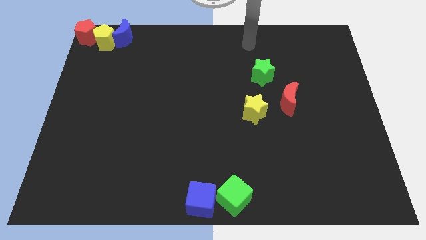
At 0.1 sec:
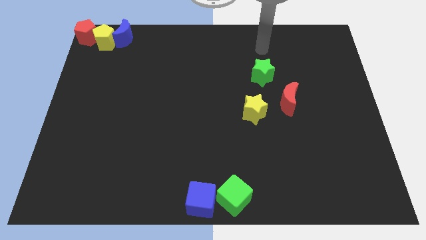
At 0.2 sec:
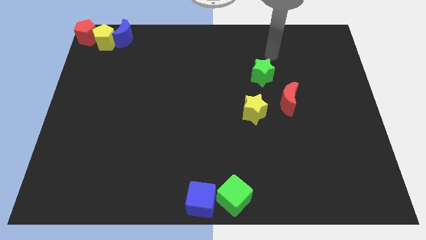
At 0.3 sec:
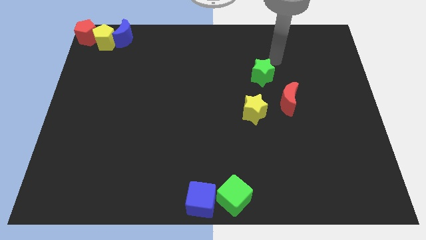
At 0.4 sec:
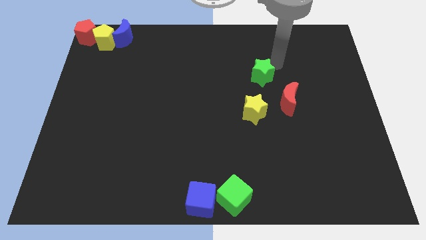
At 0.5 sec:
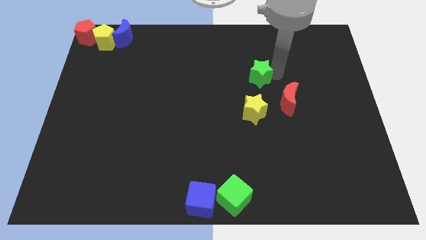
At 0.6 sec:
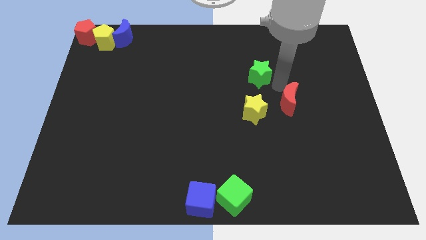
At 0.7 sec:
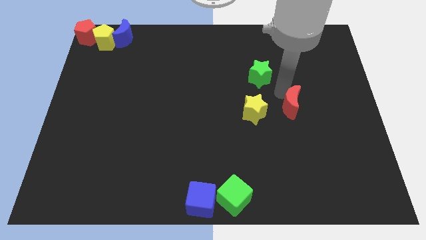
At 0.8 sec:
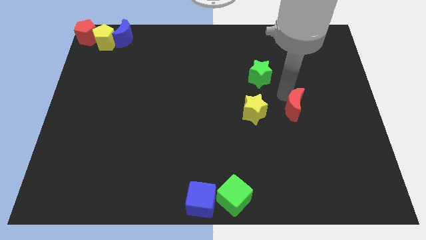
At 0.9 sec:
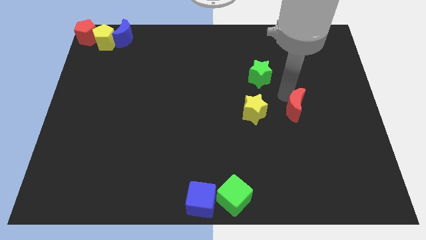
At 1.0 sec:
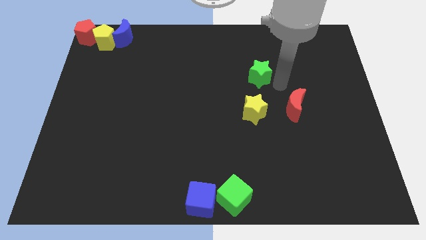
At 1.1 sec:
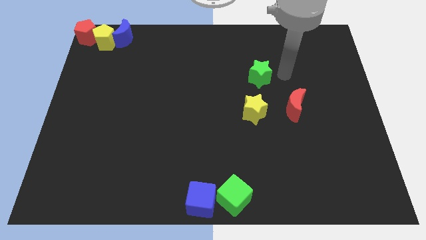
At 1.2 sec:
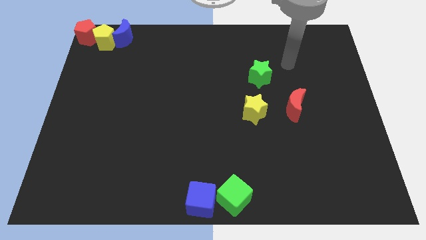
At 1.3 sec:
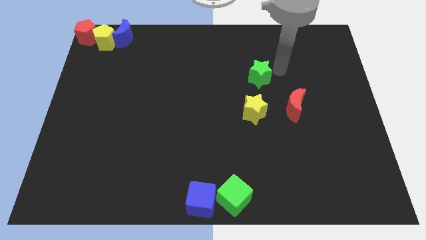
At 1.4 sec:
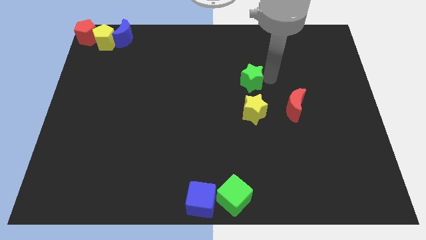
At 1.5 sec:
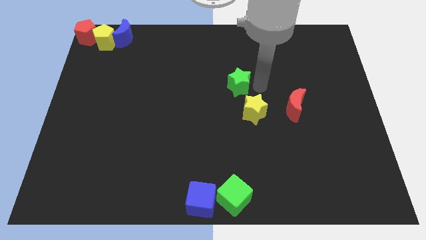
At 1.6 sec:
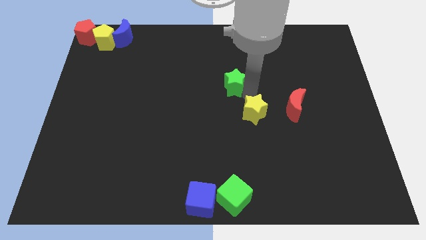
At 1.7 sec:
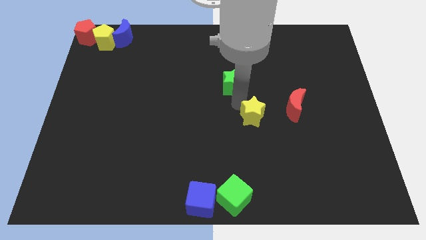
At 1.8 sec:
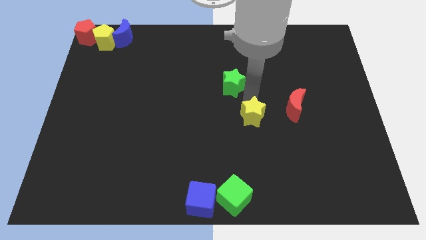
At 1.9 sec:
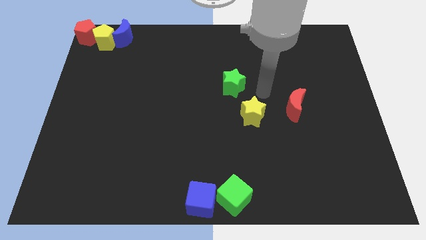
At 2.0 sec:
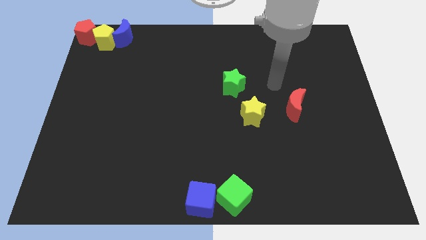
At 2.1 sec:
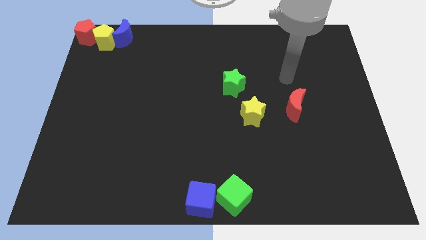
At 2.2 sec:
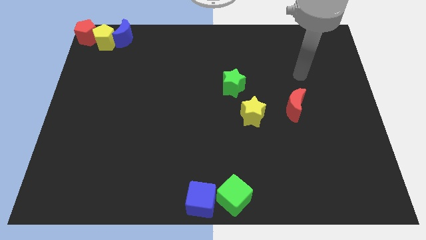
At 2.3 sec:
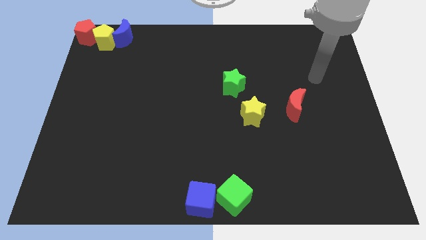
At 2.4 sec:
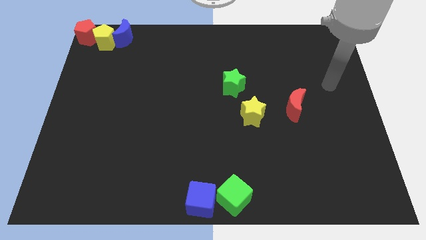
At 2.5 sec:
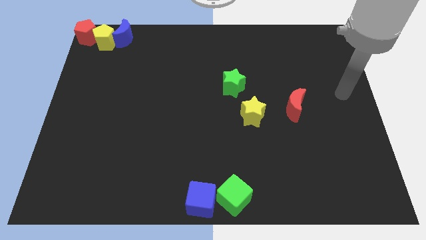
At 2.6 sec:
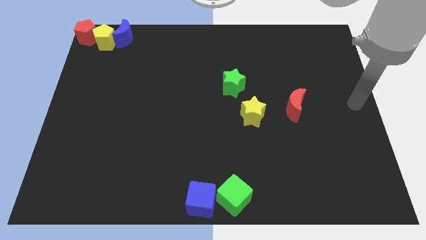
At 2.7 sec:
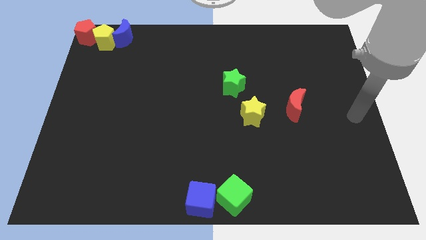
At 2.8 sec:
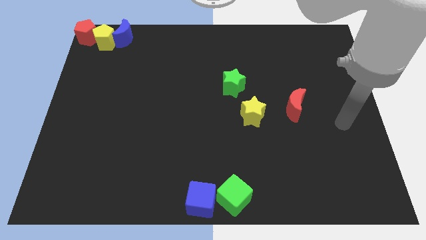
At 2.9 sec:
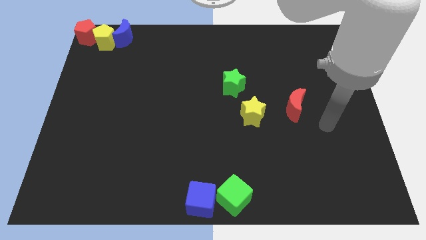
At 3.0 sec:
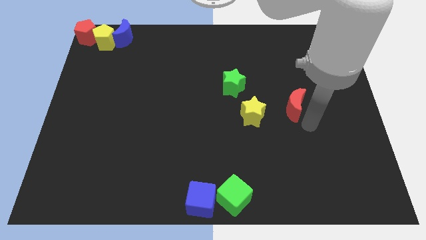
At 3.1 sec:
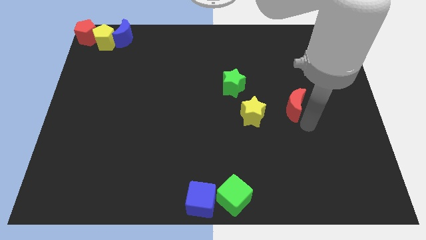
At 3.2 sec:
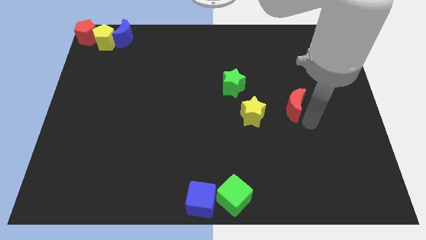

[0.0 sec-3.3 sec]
move the green star to the top left side of the yellow star

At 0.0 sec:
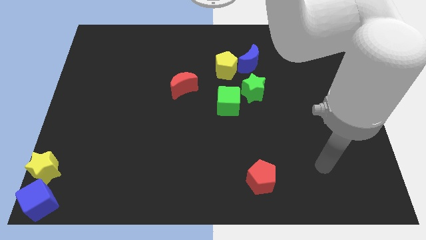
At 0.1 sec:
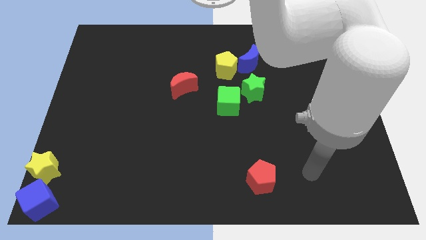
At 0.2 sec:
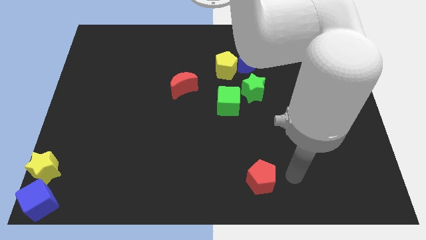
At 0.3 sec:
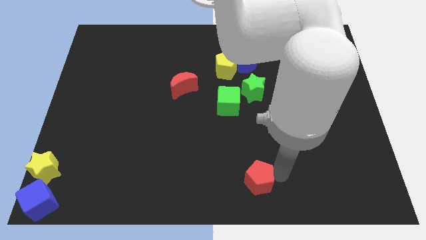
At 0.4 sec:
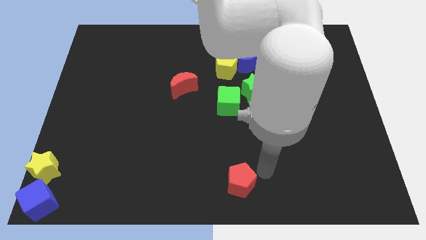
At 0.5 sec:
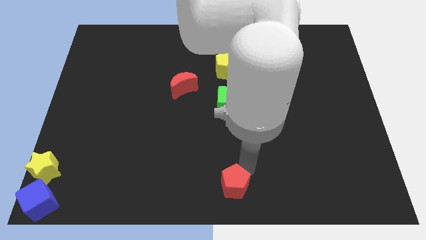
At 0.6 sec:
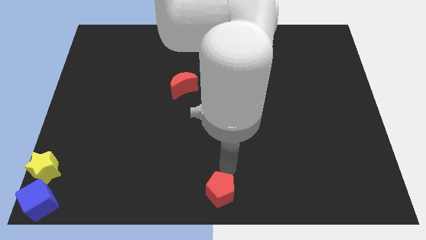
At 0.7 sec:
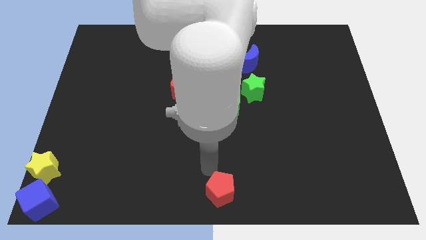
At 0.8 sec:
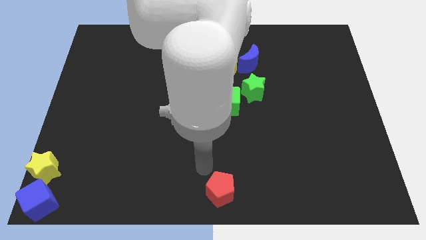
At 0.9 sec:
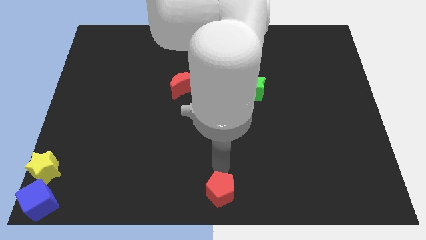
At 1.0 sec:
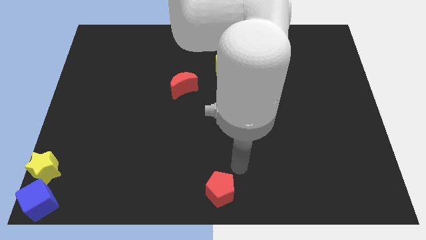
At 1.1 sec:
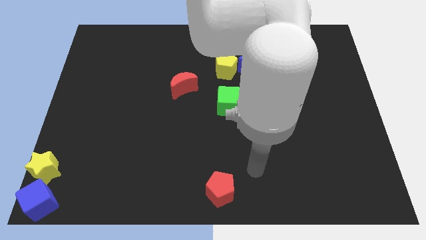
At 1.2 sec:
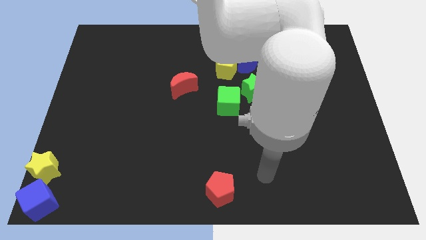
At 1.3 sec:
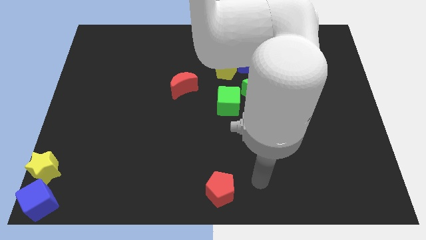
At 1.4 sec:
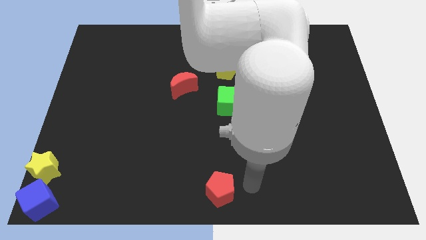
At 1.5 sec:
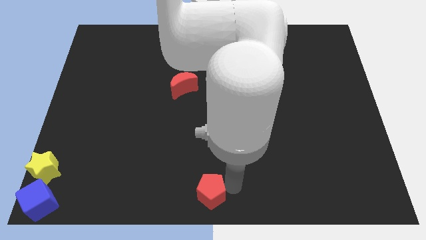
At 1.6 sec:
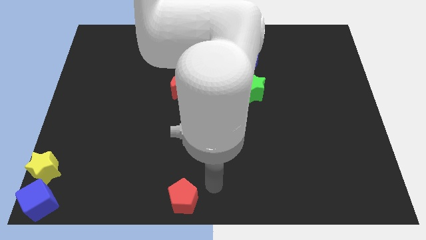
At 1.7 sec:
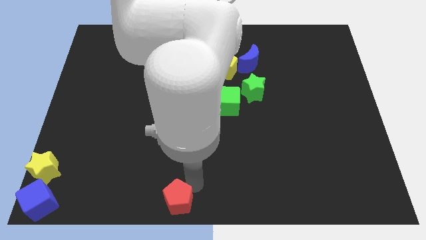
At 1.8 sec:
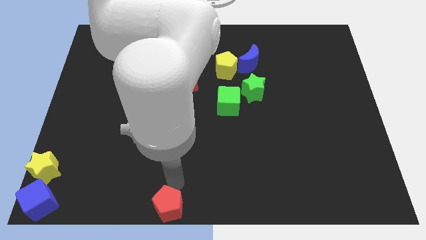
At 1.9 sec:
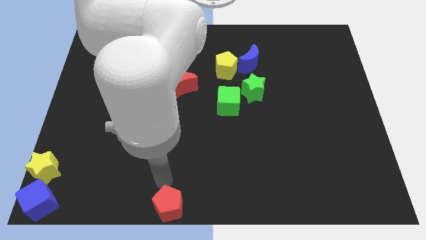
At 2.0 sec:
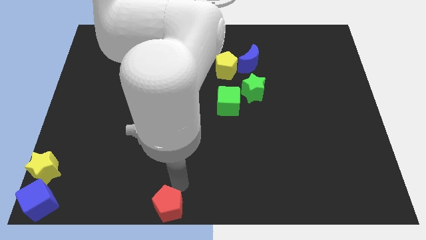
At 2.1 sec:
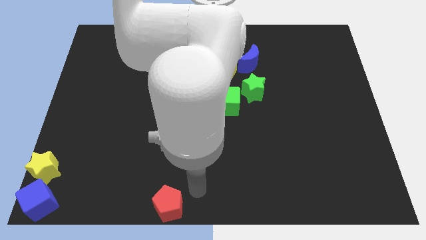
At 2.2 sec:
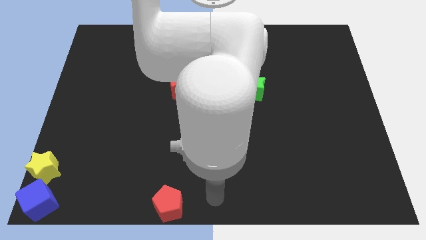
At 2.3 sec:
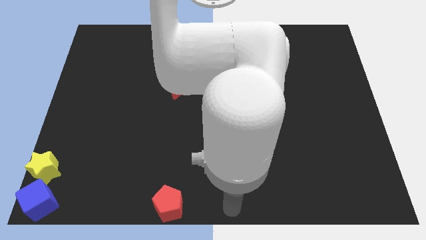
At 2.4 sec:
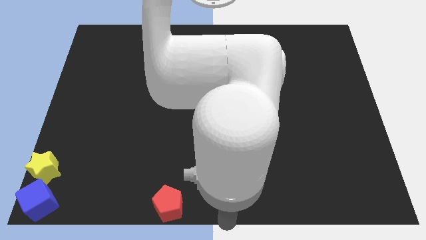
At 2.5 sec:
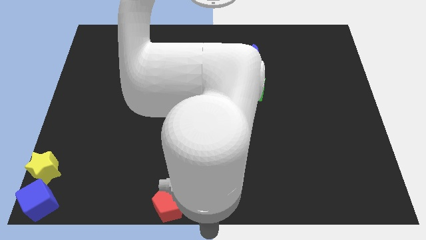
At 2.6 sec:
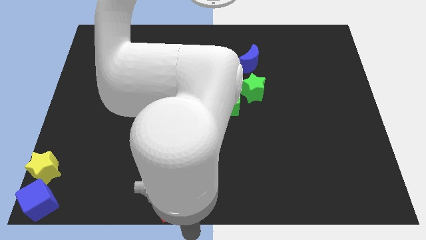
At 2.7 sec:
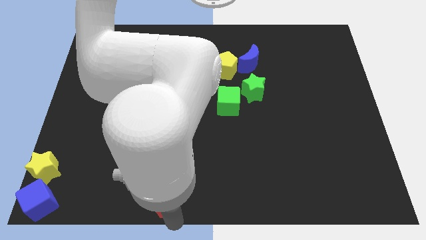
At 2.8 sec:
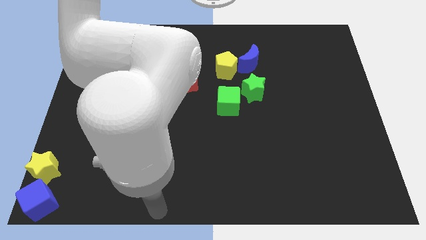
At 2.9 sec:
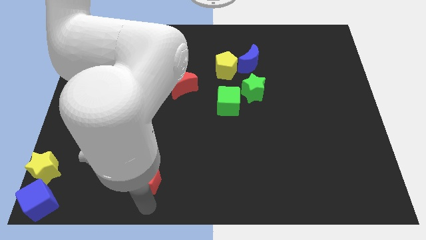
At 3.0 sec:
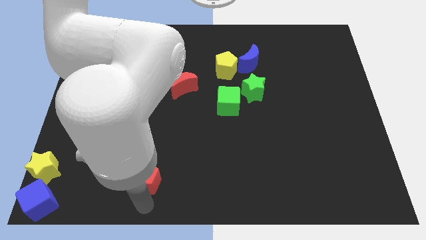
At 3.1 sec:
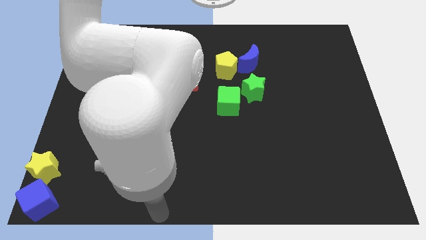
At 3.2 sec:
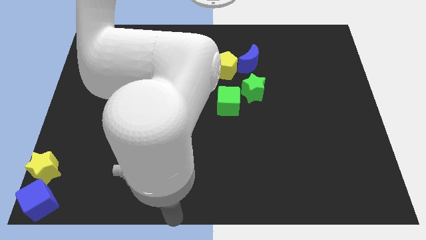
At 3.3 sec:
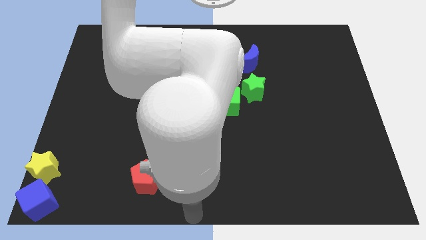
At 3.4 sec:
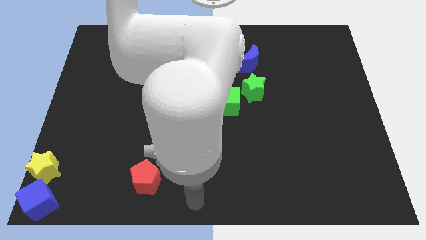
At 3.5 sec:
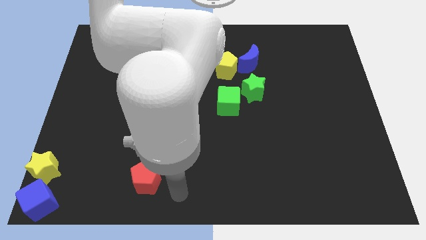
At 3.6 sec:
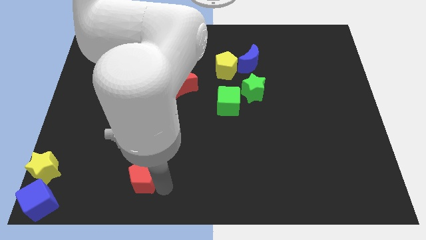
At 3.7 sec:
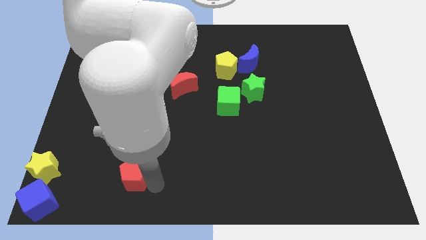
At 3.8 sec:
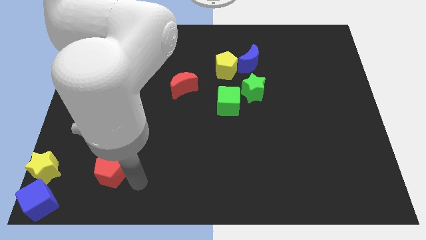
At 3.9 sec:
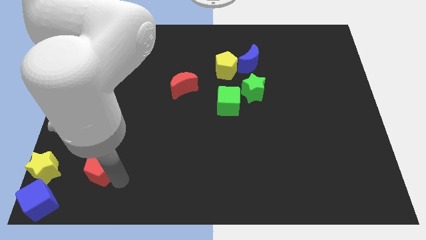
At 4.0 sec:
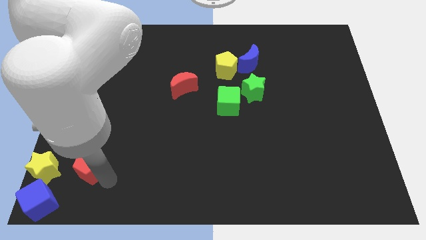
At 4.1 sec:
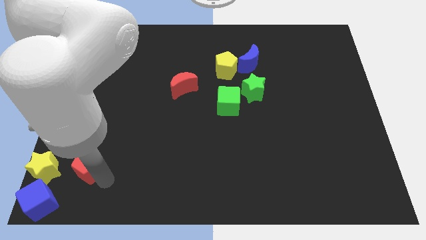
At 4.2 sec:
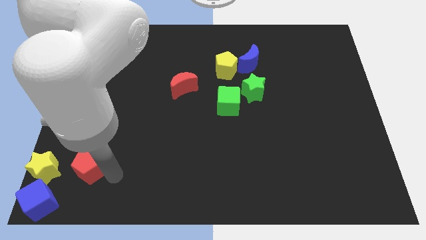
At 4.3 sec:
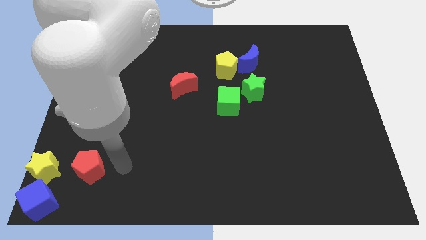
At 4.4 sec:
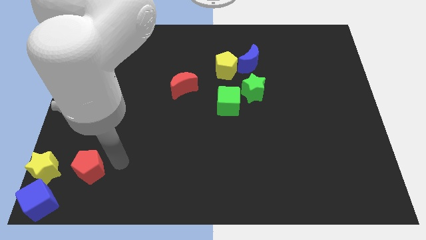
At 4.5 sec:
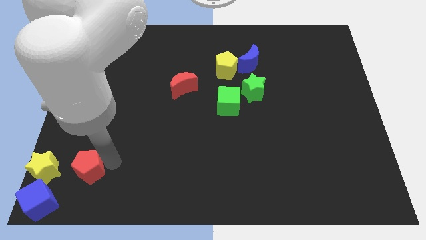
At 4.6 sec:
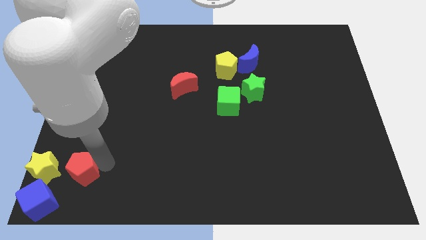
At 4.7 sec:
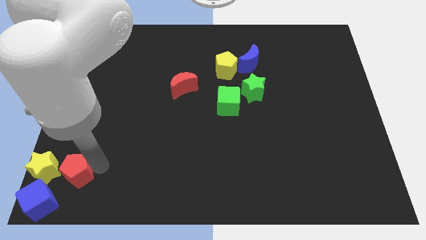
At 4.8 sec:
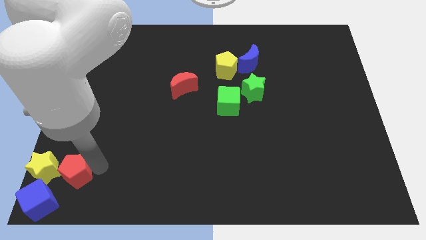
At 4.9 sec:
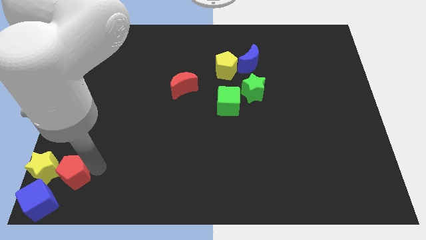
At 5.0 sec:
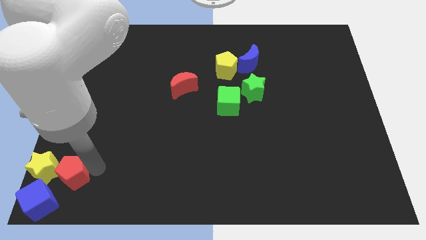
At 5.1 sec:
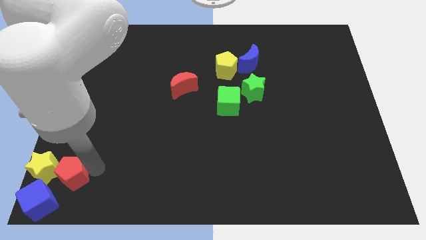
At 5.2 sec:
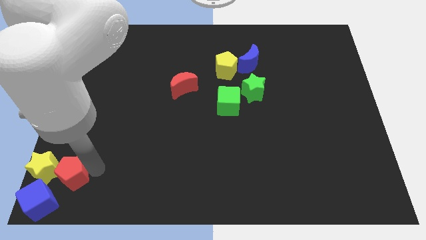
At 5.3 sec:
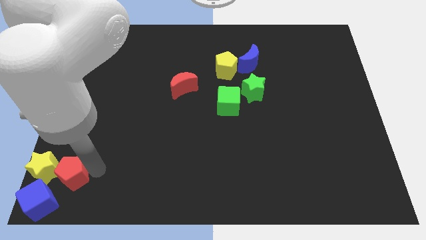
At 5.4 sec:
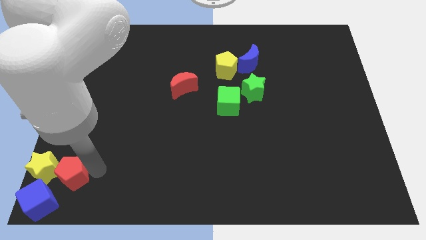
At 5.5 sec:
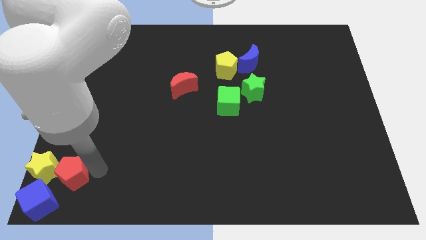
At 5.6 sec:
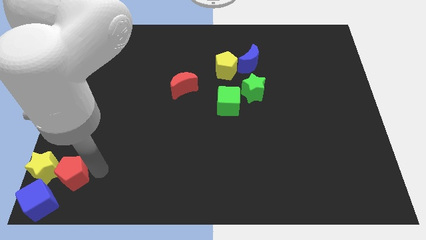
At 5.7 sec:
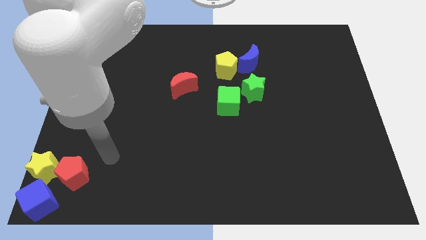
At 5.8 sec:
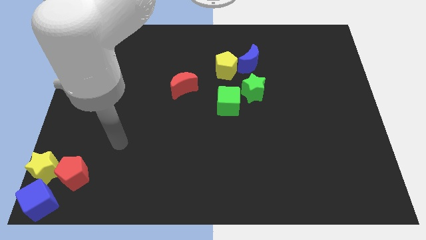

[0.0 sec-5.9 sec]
place the red pentagon to the right side of the yellow star
